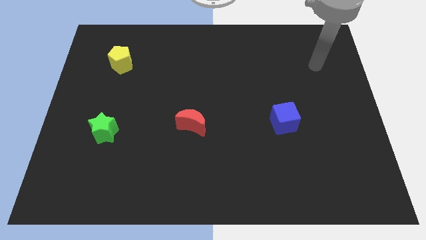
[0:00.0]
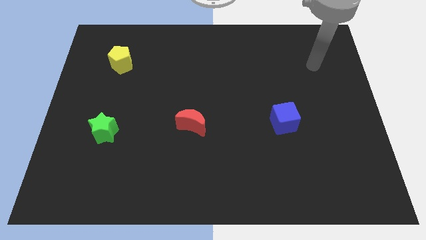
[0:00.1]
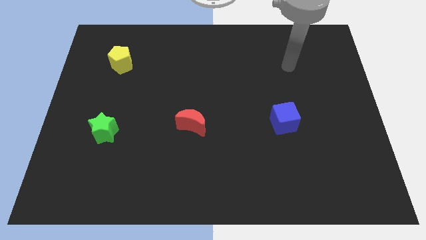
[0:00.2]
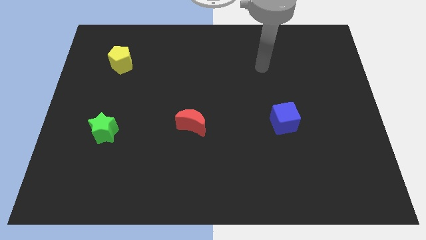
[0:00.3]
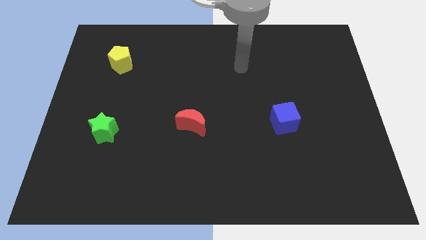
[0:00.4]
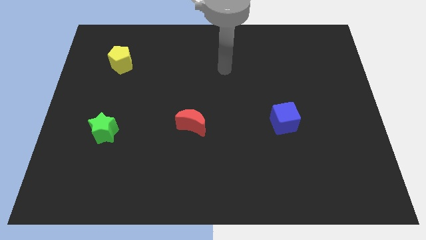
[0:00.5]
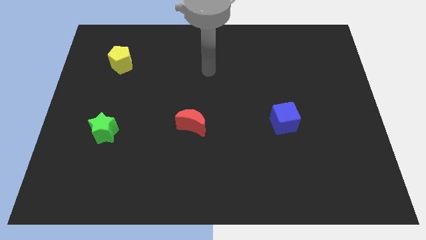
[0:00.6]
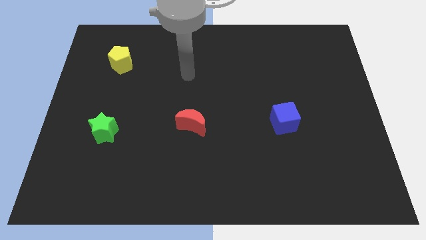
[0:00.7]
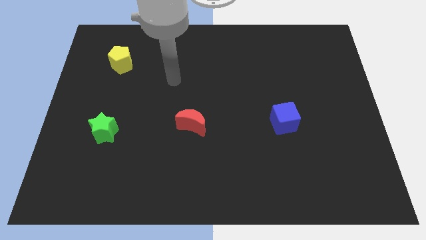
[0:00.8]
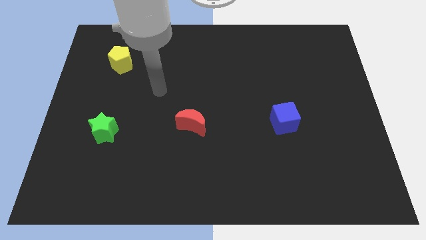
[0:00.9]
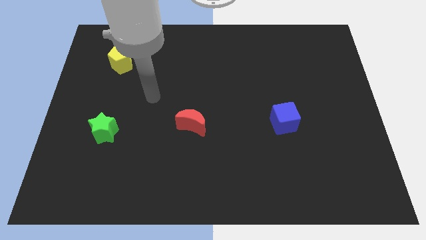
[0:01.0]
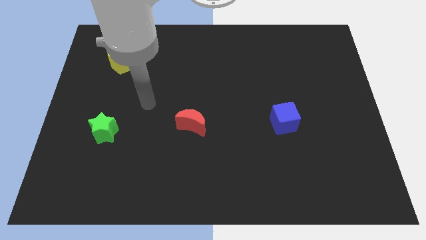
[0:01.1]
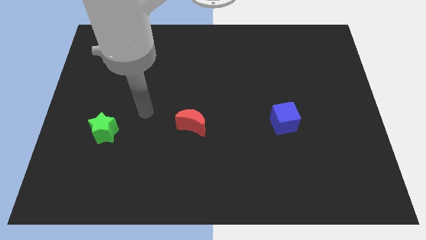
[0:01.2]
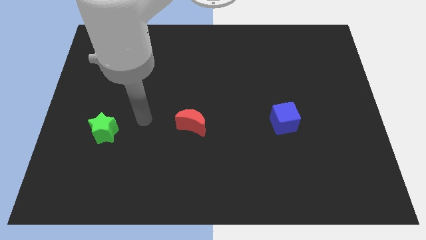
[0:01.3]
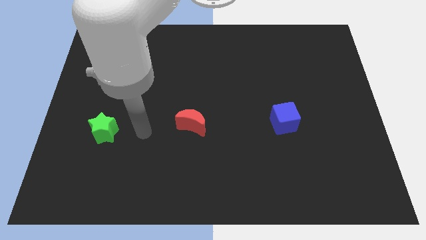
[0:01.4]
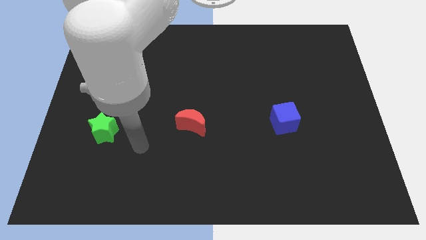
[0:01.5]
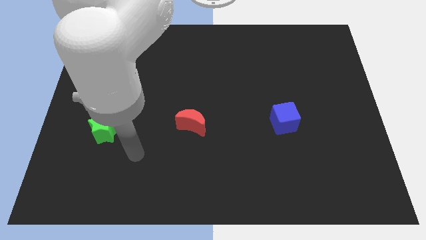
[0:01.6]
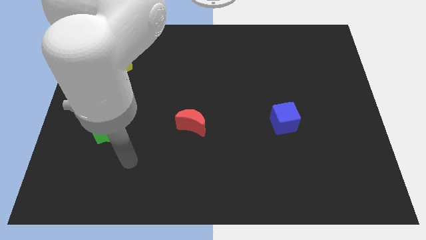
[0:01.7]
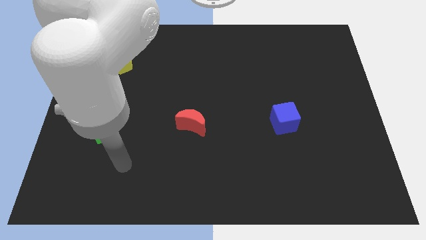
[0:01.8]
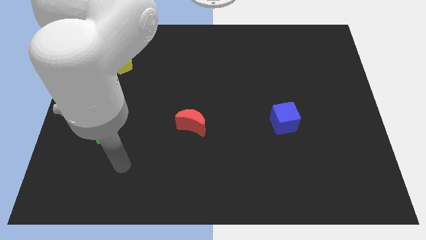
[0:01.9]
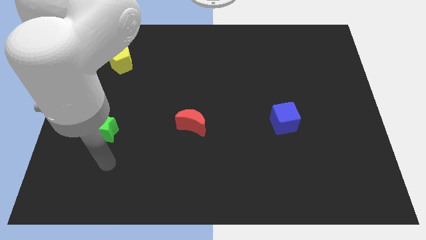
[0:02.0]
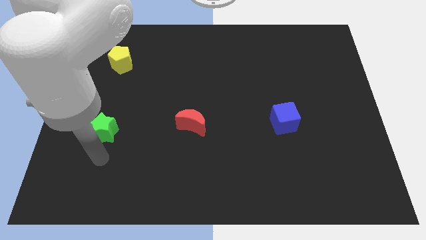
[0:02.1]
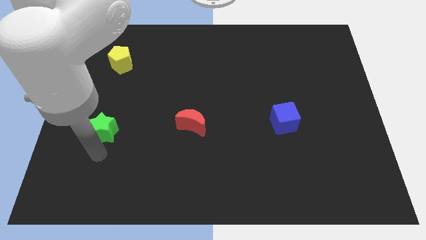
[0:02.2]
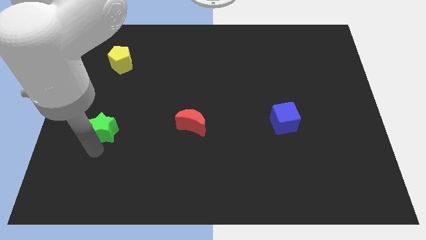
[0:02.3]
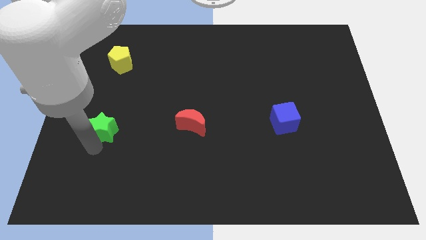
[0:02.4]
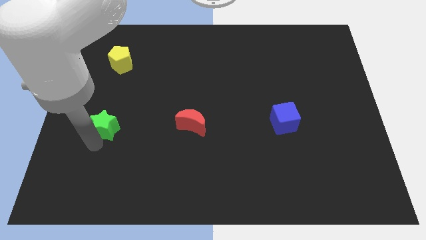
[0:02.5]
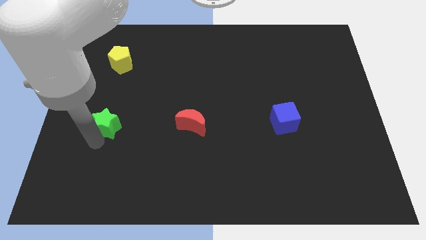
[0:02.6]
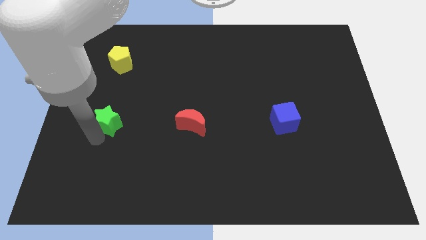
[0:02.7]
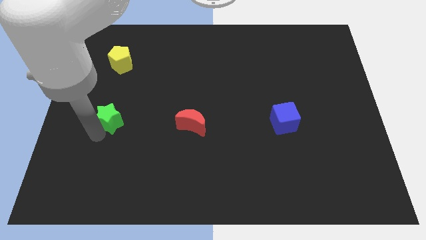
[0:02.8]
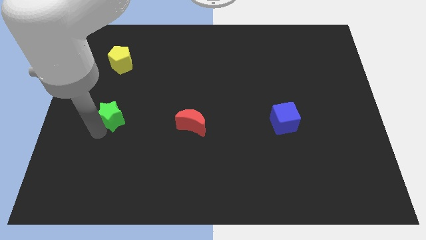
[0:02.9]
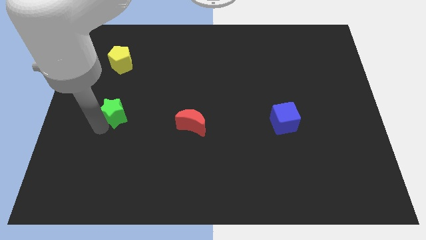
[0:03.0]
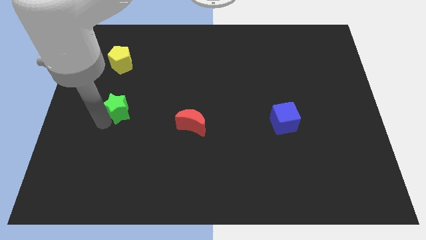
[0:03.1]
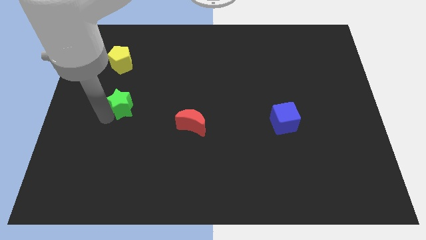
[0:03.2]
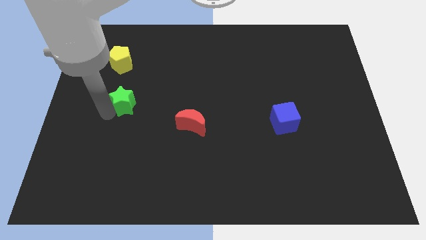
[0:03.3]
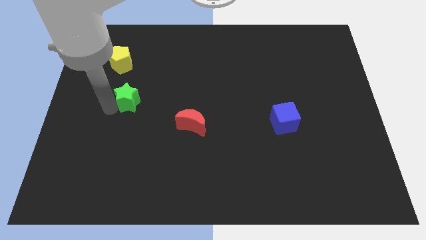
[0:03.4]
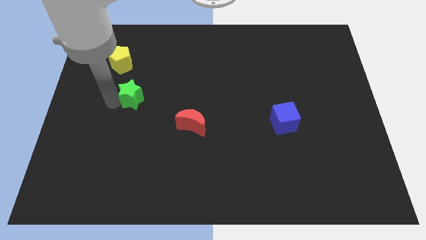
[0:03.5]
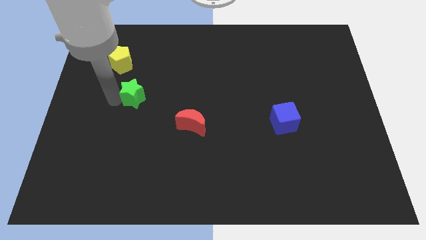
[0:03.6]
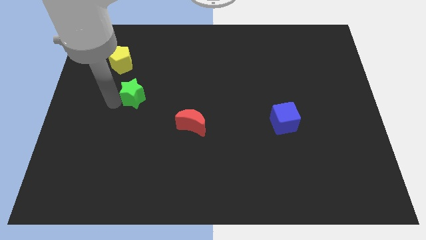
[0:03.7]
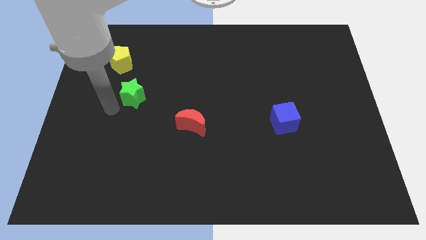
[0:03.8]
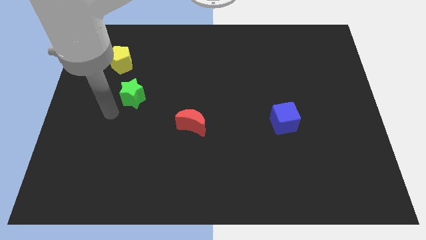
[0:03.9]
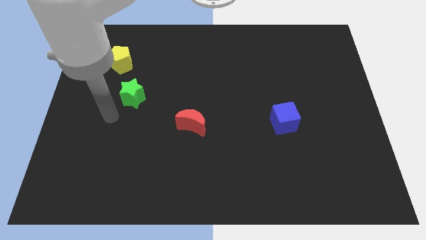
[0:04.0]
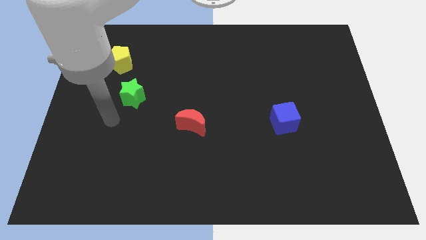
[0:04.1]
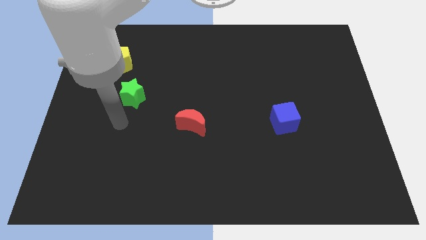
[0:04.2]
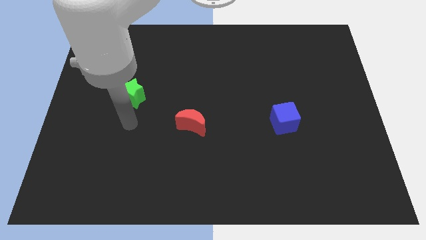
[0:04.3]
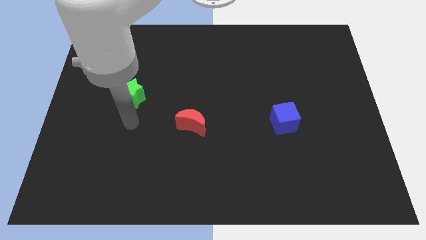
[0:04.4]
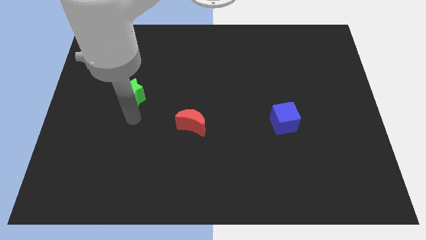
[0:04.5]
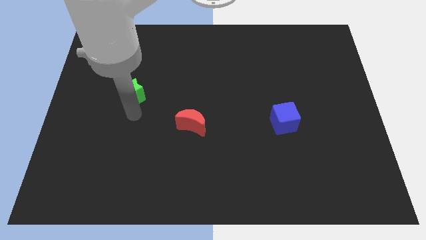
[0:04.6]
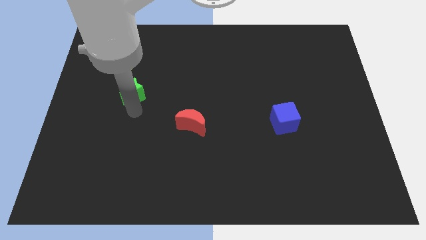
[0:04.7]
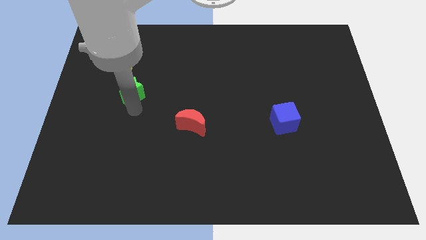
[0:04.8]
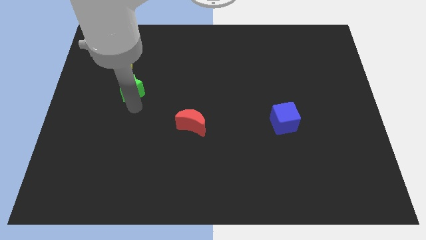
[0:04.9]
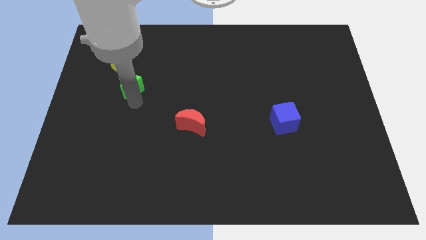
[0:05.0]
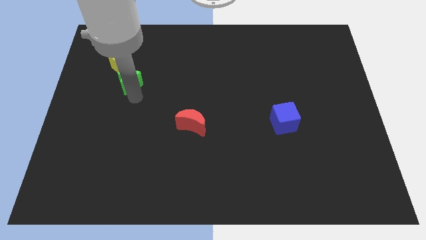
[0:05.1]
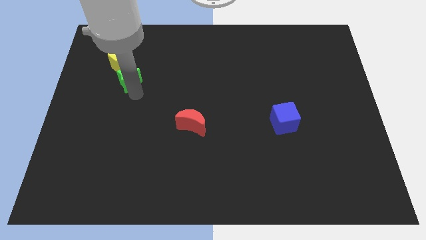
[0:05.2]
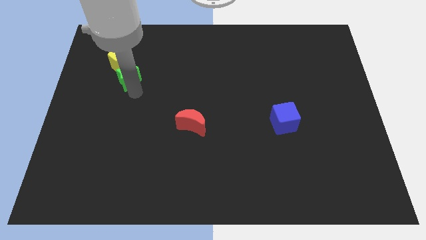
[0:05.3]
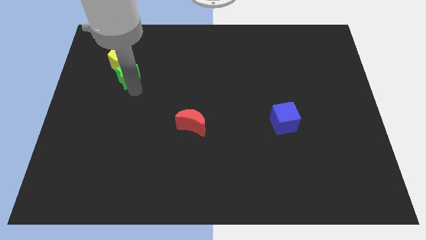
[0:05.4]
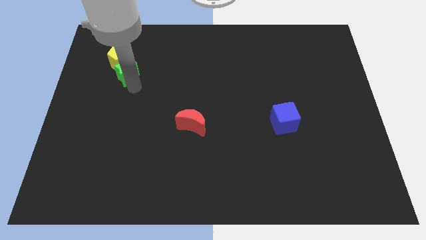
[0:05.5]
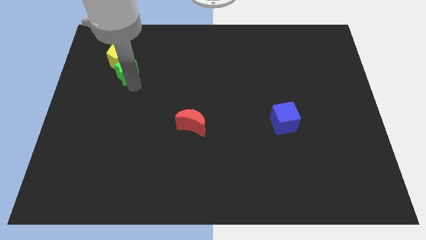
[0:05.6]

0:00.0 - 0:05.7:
push the star to the yellow block

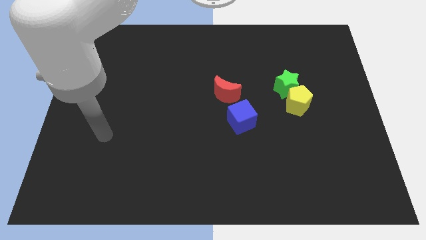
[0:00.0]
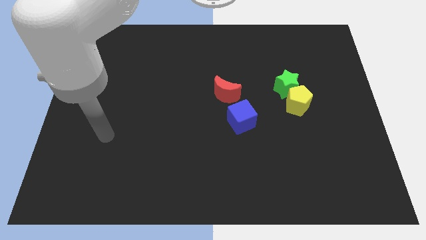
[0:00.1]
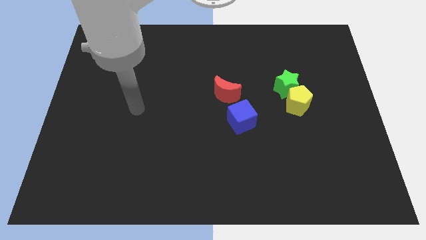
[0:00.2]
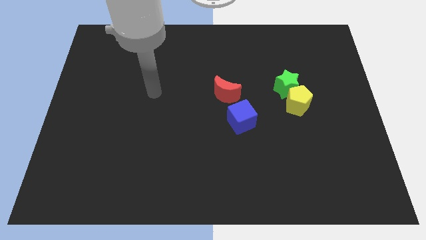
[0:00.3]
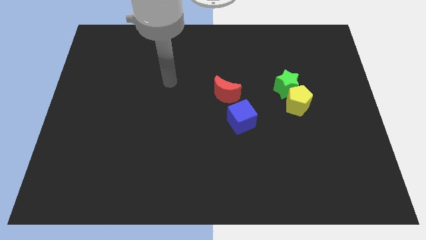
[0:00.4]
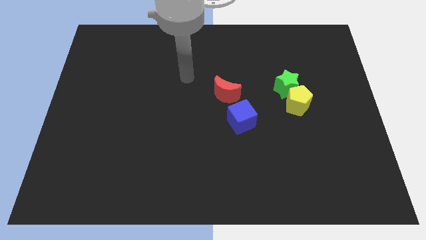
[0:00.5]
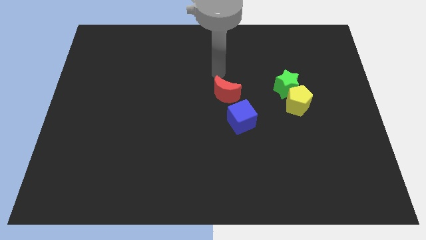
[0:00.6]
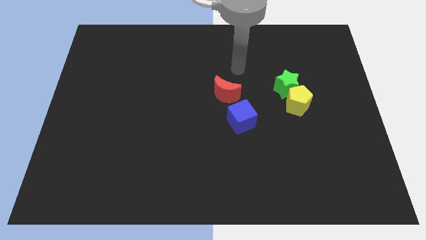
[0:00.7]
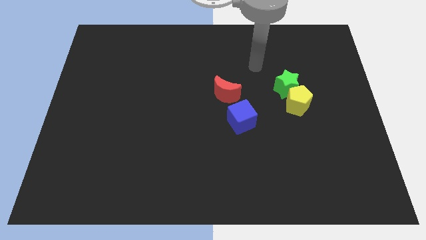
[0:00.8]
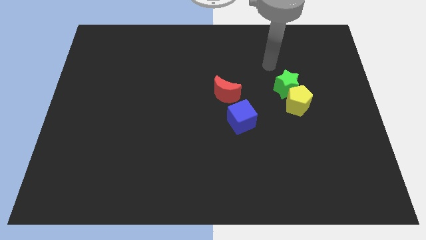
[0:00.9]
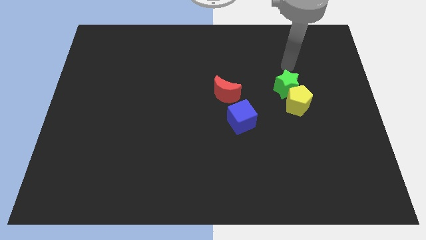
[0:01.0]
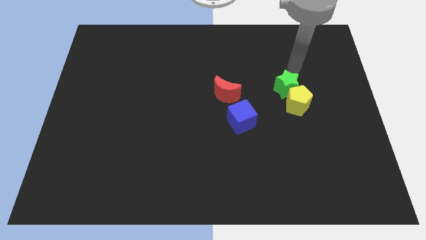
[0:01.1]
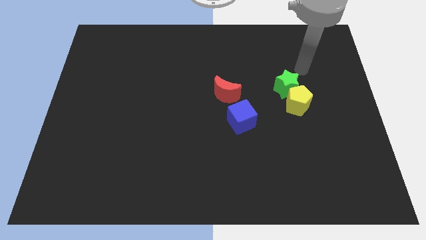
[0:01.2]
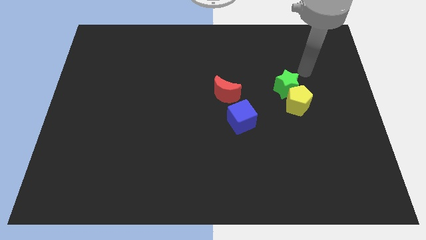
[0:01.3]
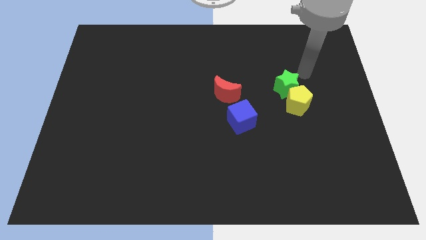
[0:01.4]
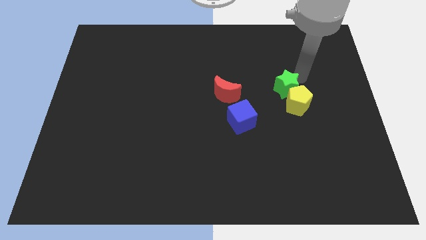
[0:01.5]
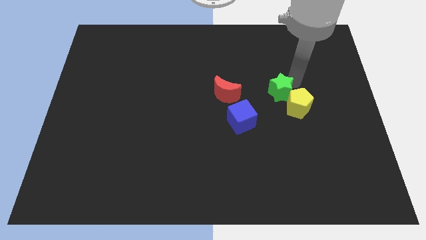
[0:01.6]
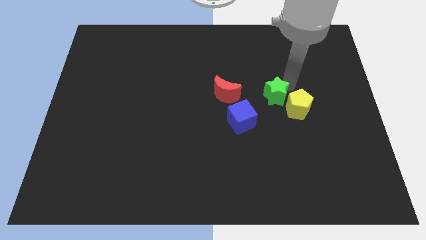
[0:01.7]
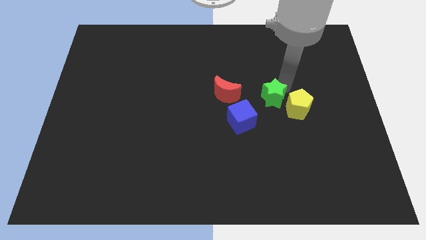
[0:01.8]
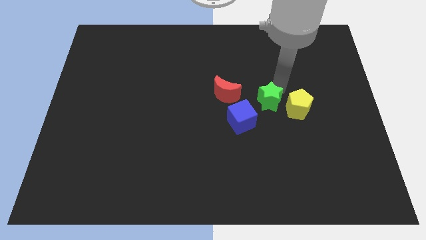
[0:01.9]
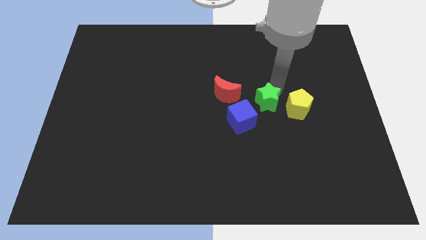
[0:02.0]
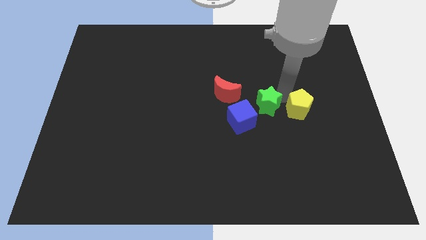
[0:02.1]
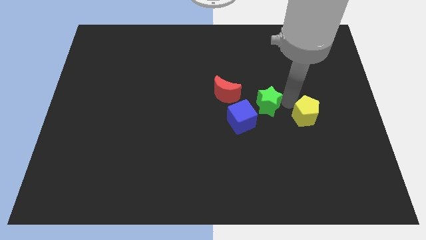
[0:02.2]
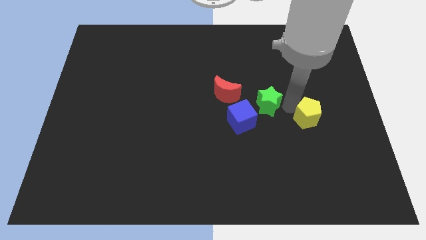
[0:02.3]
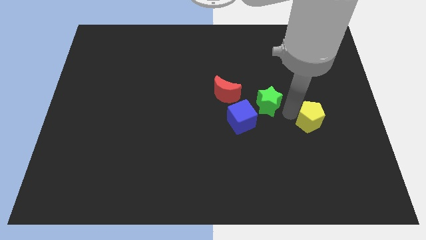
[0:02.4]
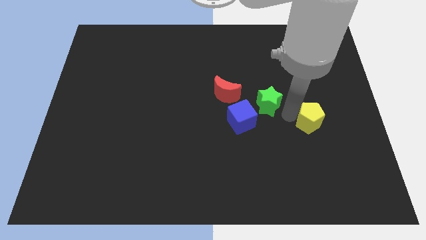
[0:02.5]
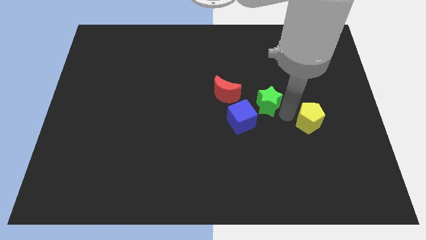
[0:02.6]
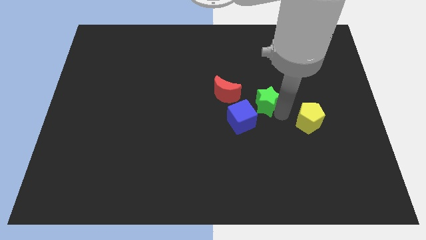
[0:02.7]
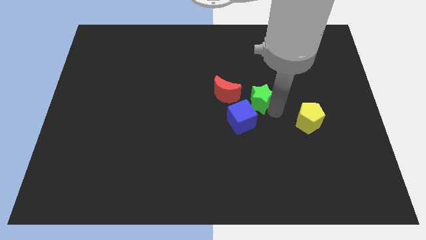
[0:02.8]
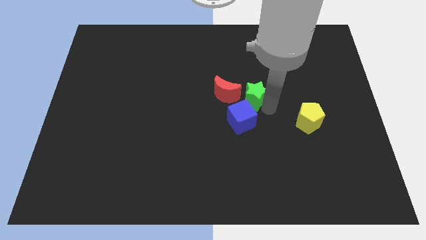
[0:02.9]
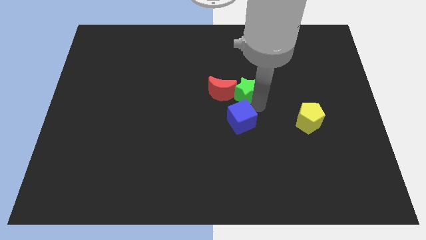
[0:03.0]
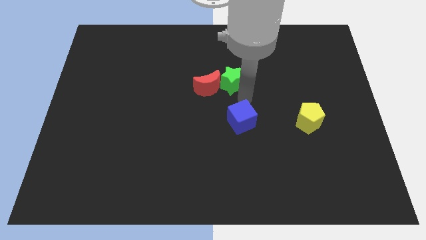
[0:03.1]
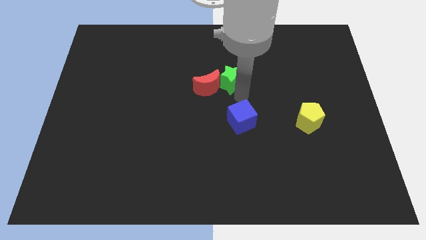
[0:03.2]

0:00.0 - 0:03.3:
move the green block close to the moon
